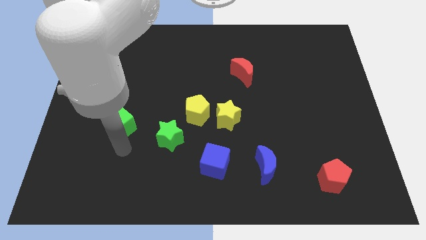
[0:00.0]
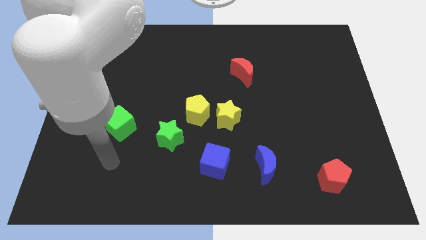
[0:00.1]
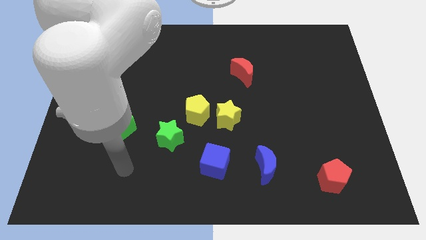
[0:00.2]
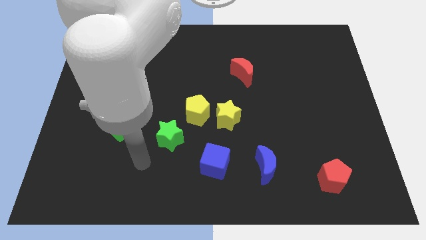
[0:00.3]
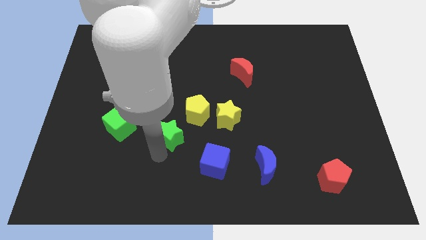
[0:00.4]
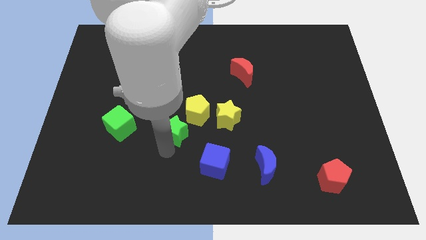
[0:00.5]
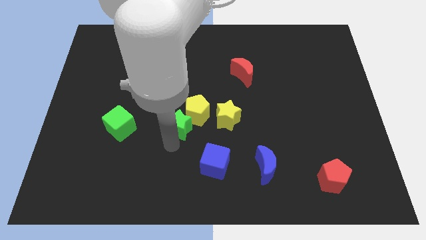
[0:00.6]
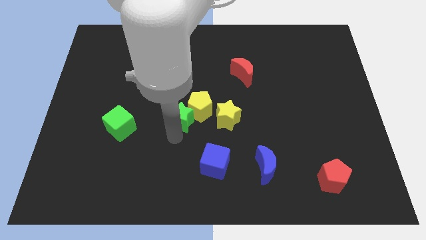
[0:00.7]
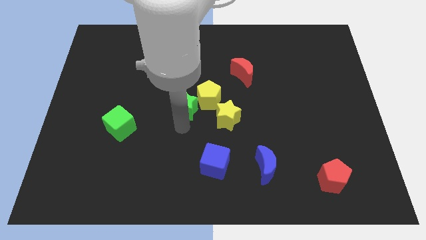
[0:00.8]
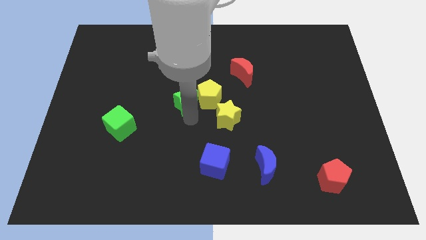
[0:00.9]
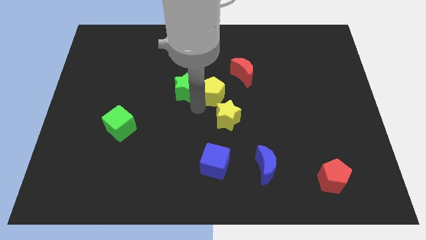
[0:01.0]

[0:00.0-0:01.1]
push green star into the yellow pentagon

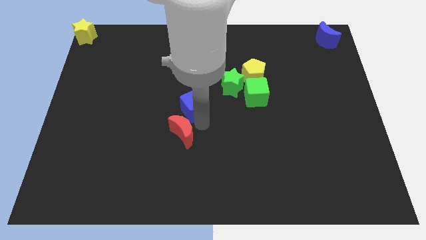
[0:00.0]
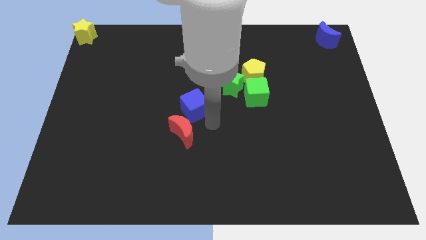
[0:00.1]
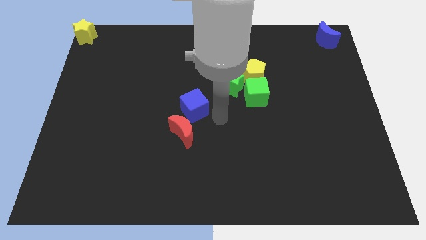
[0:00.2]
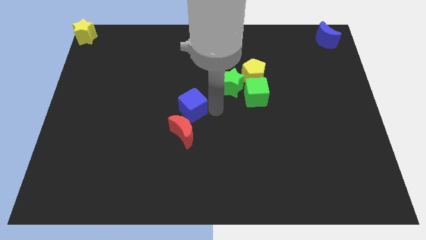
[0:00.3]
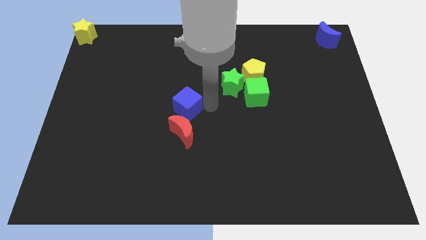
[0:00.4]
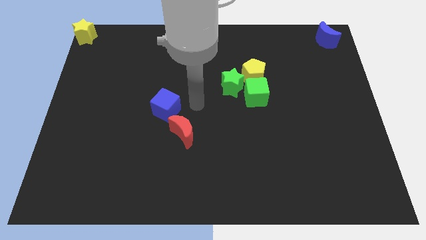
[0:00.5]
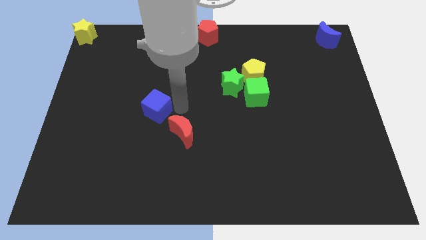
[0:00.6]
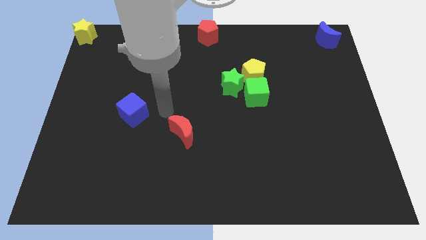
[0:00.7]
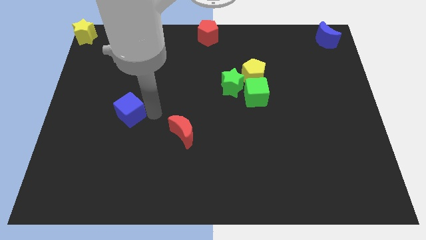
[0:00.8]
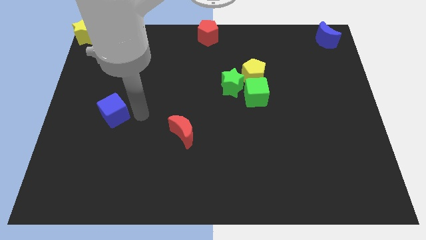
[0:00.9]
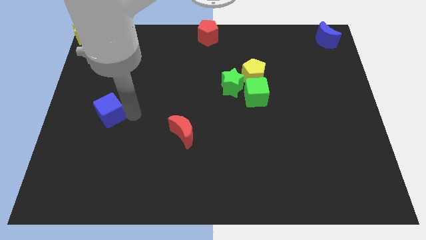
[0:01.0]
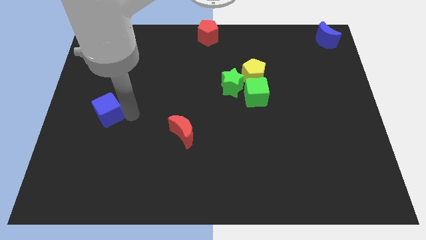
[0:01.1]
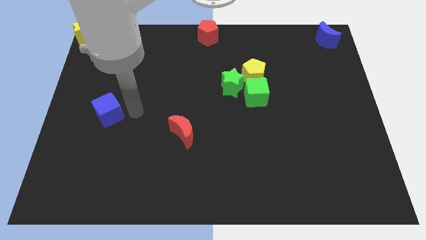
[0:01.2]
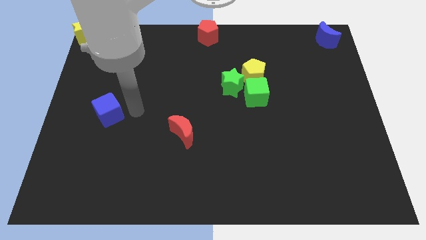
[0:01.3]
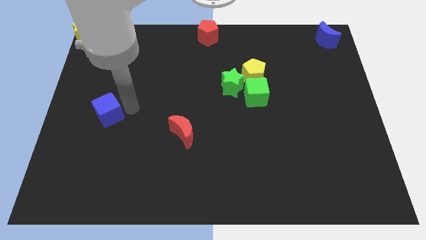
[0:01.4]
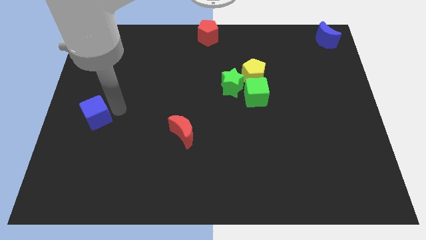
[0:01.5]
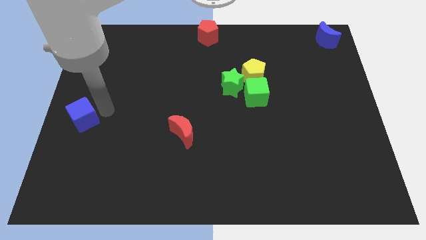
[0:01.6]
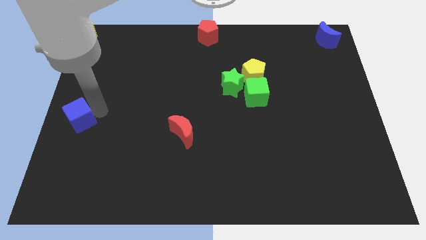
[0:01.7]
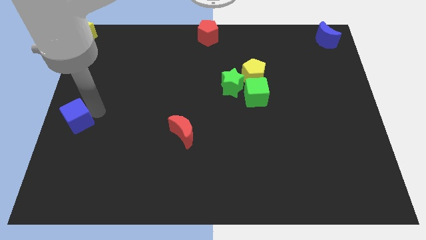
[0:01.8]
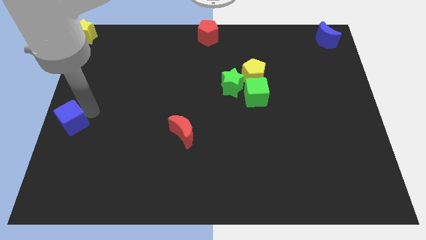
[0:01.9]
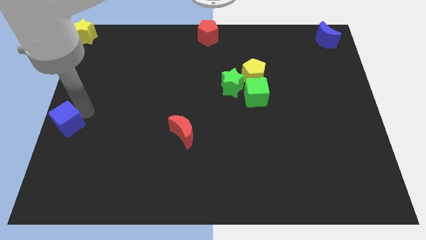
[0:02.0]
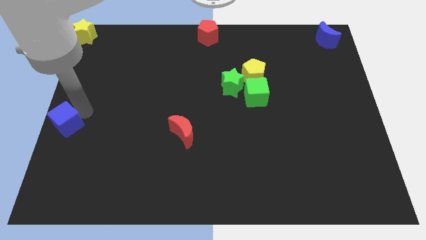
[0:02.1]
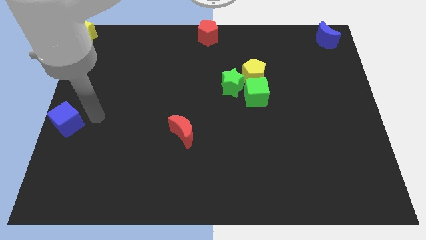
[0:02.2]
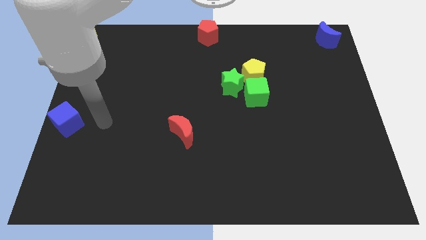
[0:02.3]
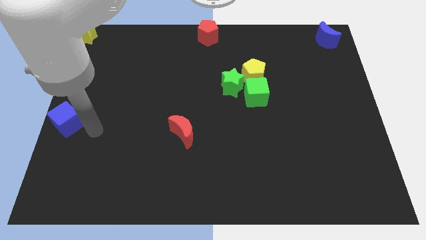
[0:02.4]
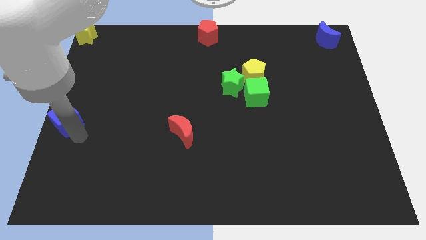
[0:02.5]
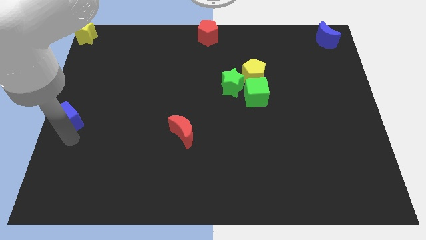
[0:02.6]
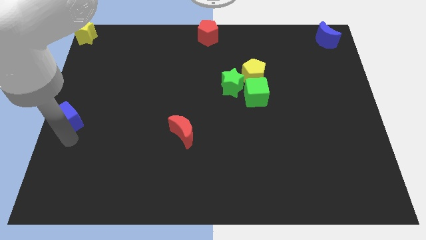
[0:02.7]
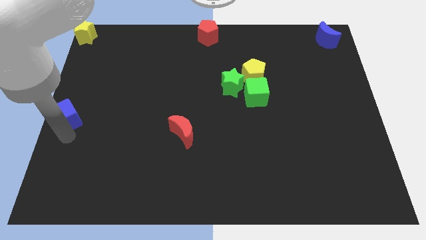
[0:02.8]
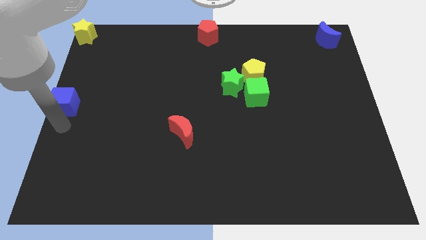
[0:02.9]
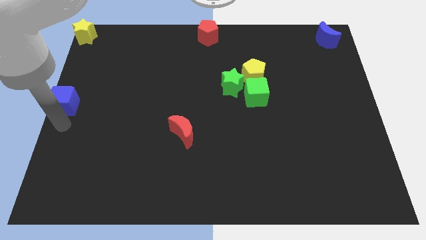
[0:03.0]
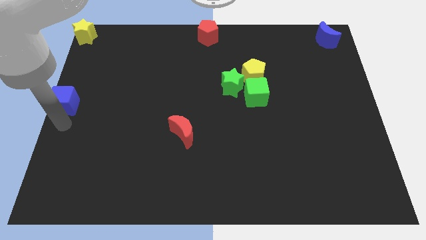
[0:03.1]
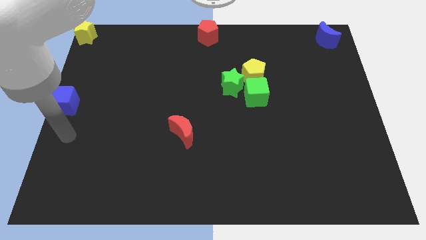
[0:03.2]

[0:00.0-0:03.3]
put the blue cube vertically below the yellow star

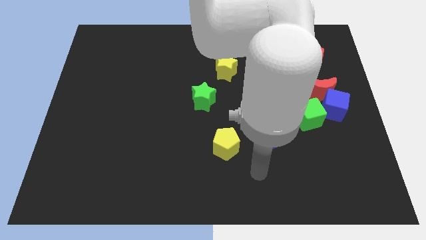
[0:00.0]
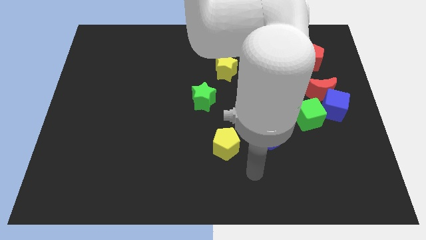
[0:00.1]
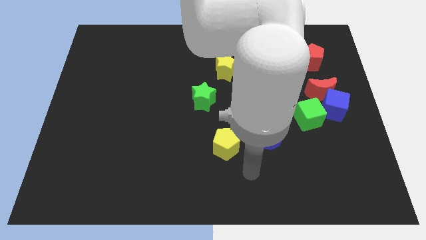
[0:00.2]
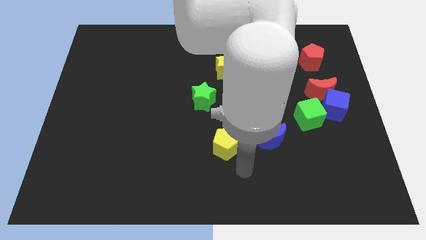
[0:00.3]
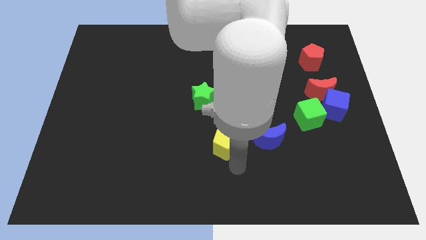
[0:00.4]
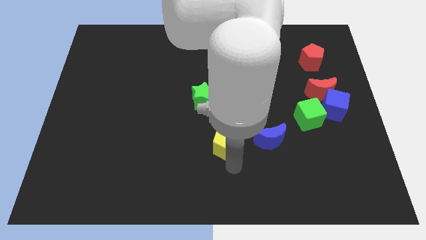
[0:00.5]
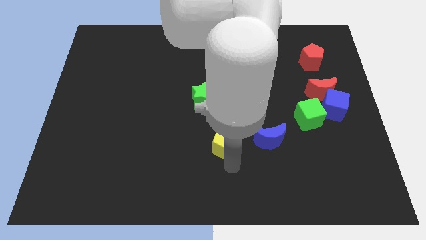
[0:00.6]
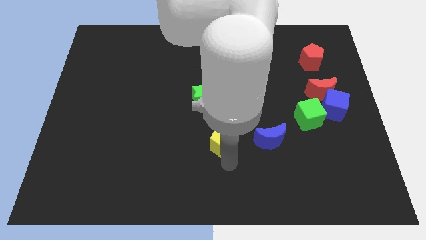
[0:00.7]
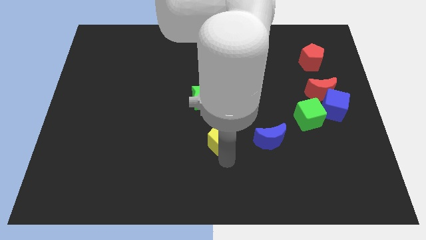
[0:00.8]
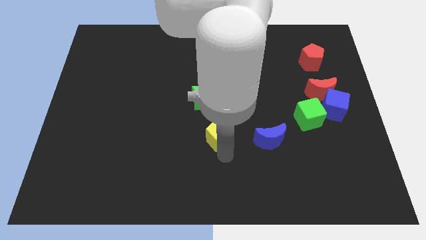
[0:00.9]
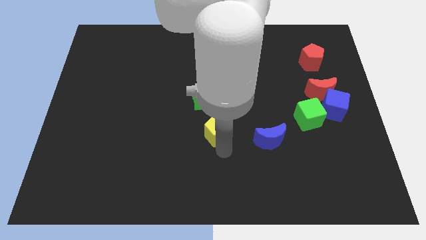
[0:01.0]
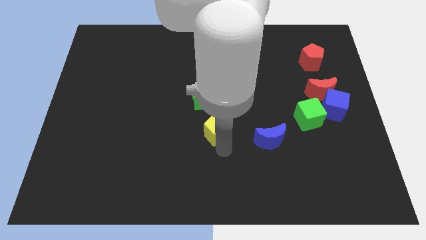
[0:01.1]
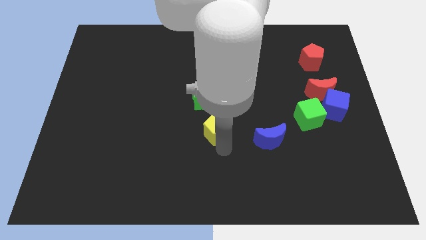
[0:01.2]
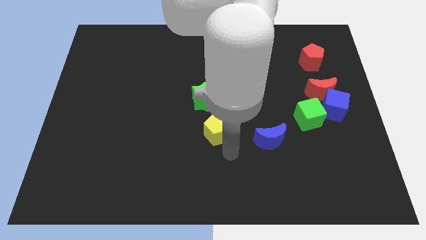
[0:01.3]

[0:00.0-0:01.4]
push the yellow pentagon slightly to the top of the board

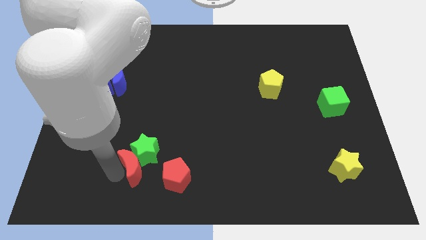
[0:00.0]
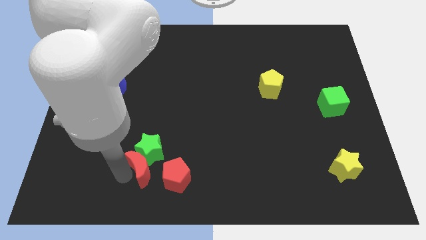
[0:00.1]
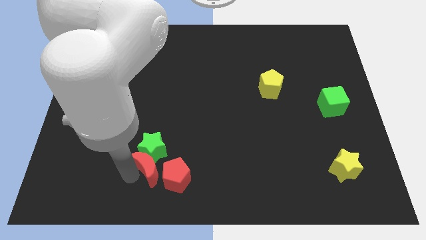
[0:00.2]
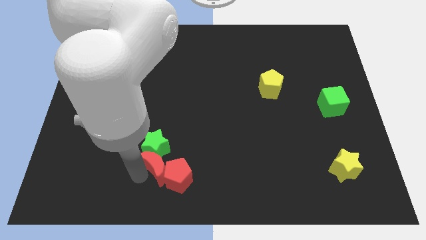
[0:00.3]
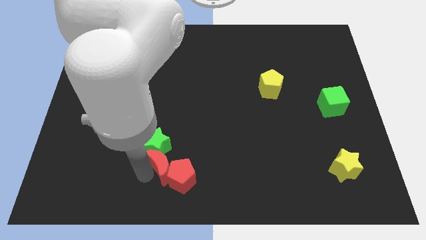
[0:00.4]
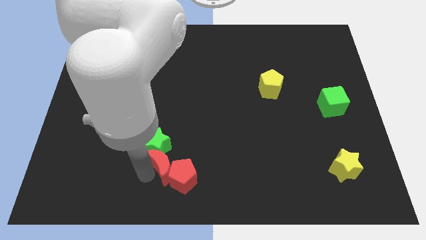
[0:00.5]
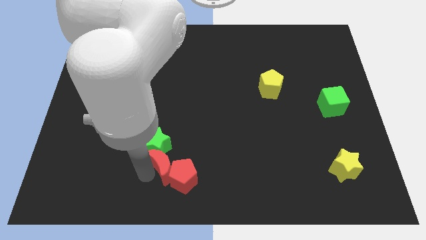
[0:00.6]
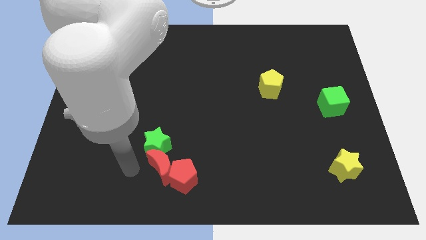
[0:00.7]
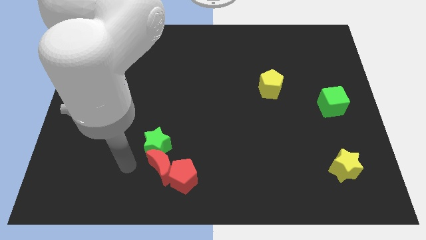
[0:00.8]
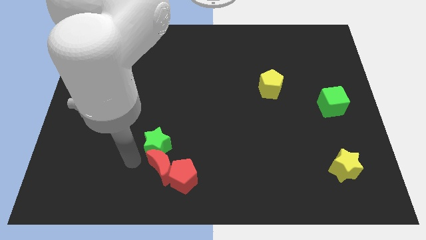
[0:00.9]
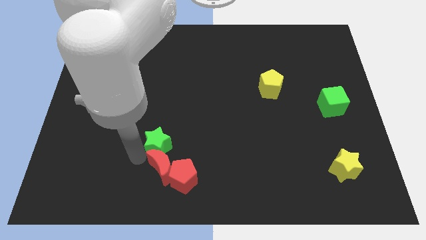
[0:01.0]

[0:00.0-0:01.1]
push the red moon into the red pentagon

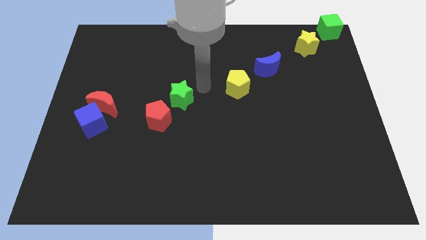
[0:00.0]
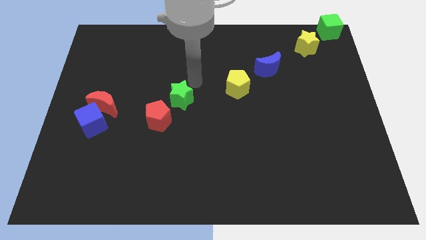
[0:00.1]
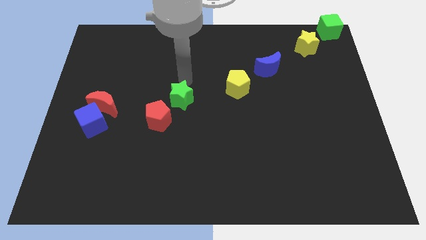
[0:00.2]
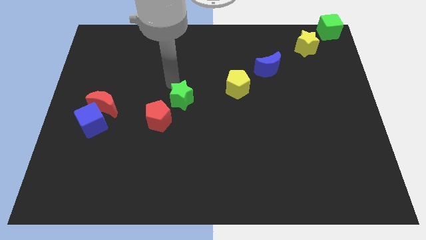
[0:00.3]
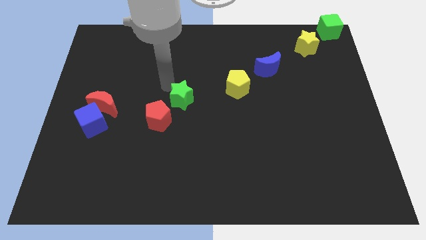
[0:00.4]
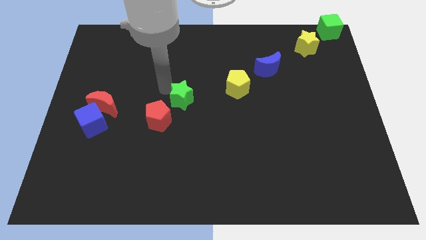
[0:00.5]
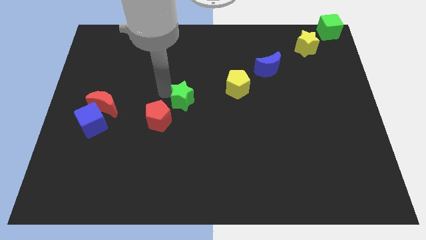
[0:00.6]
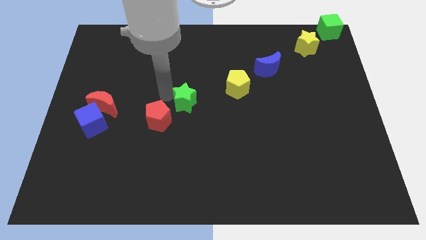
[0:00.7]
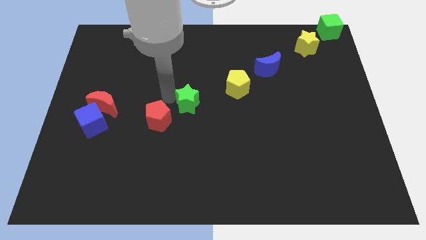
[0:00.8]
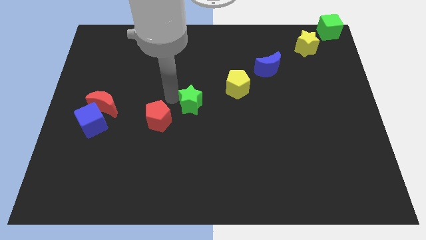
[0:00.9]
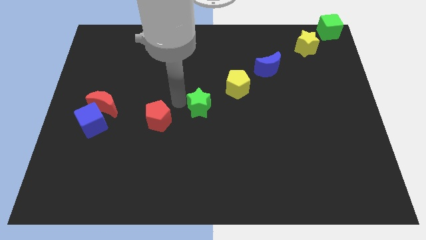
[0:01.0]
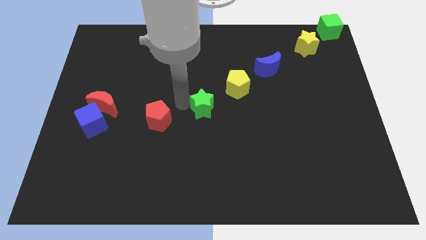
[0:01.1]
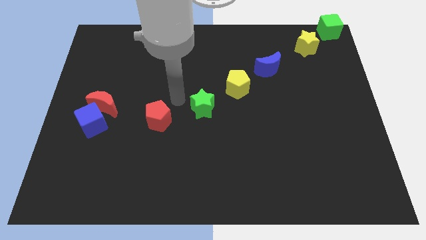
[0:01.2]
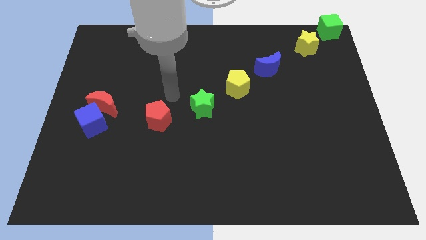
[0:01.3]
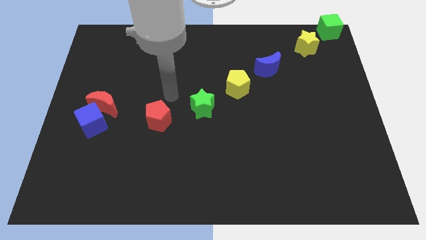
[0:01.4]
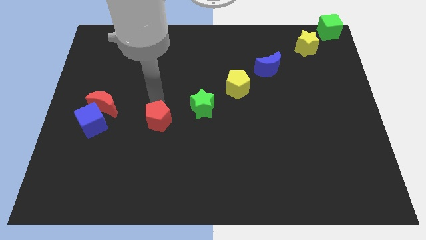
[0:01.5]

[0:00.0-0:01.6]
place the green star between the red pentagon and the yellow pentagon

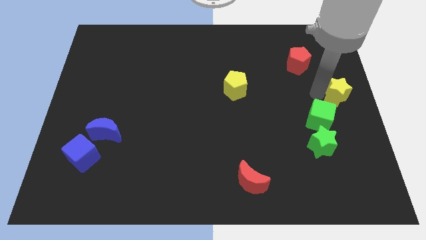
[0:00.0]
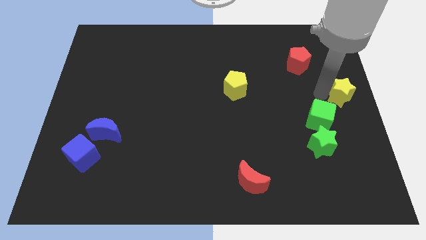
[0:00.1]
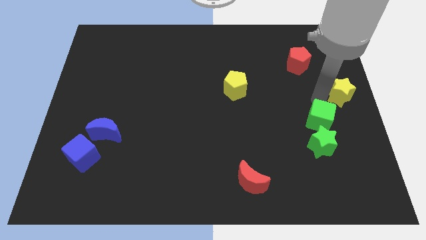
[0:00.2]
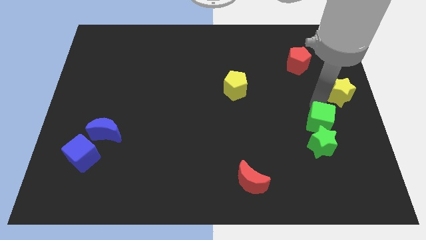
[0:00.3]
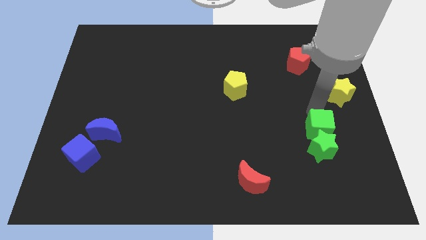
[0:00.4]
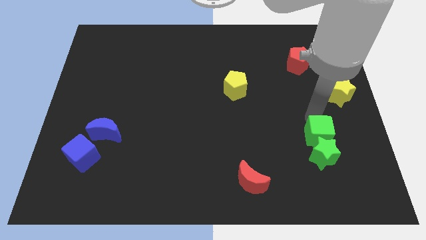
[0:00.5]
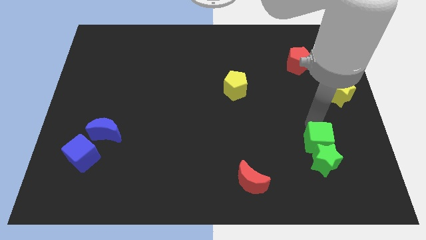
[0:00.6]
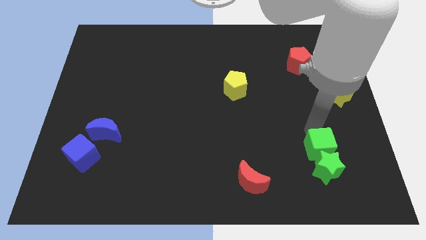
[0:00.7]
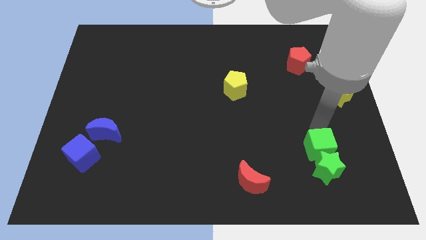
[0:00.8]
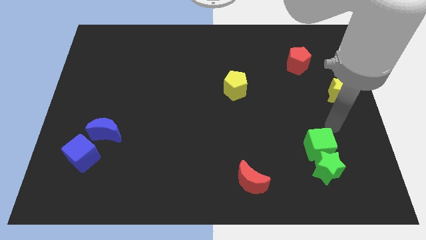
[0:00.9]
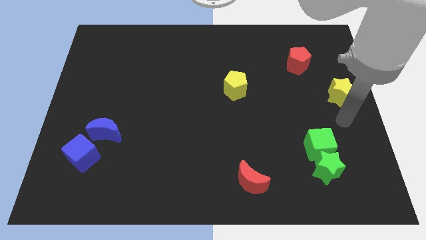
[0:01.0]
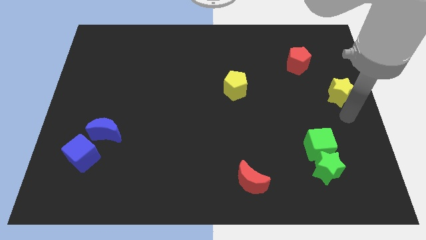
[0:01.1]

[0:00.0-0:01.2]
separate yellow star and green blocks
